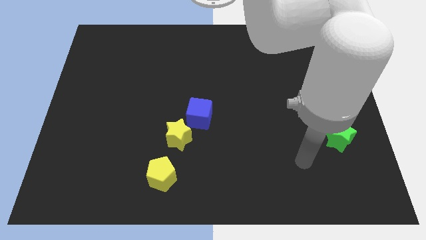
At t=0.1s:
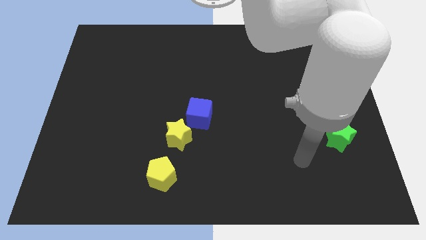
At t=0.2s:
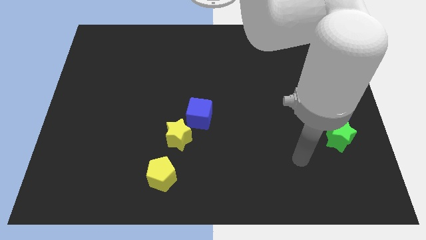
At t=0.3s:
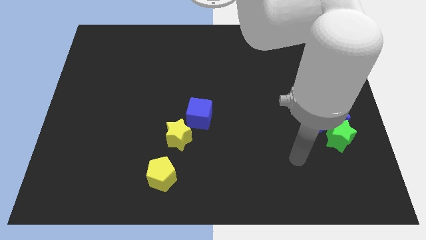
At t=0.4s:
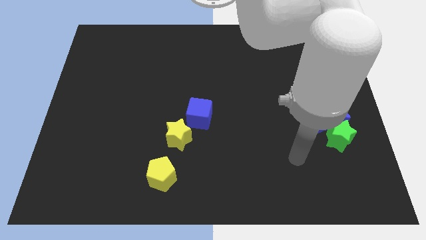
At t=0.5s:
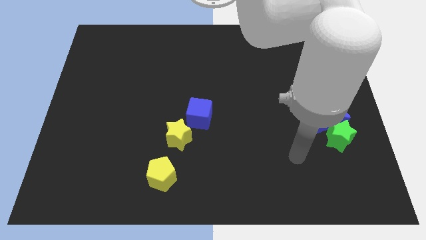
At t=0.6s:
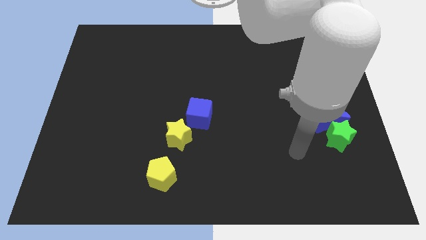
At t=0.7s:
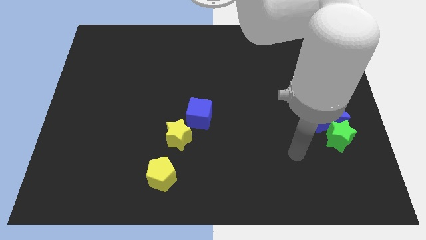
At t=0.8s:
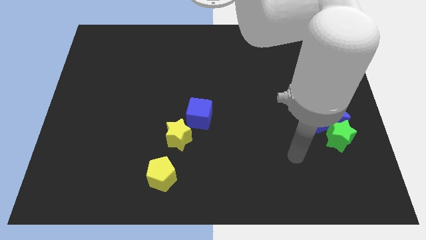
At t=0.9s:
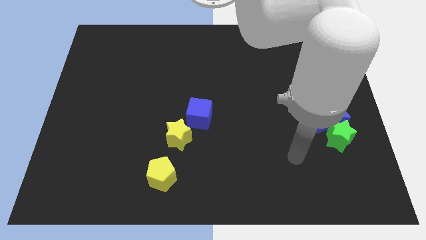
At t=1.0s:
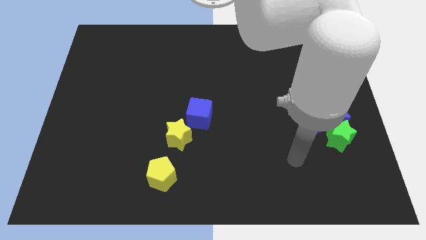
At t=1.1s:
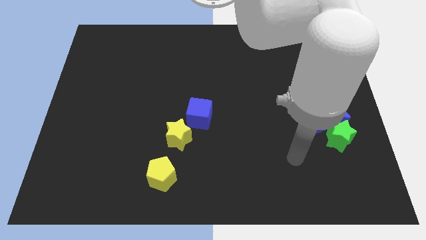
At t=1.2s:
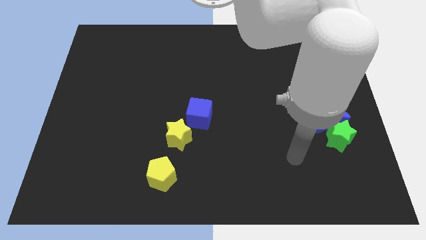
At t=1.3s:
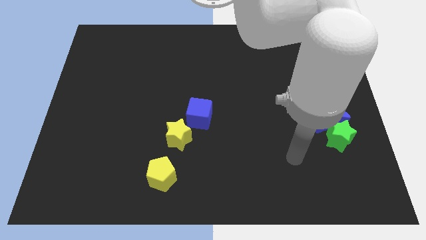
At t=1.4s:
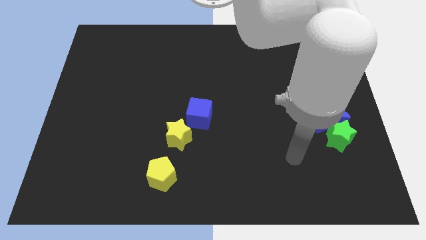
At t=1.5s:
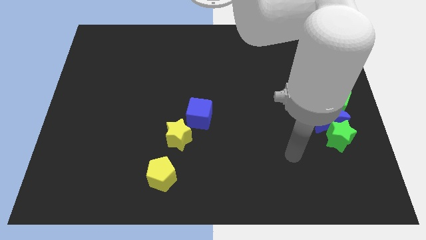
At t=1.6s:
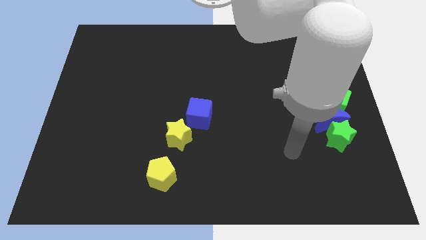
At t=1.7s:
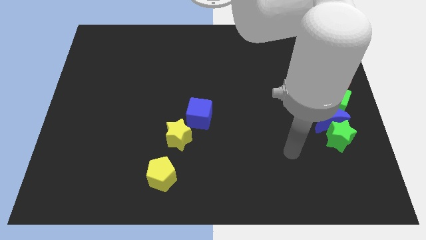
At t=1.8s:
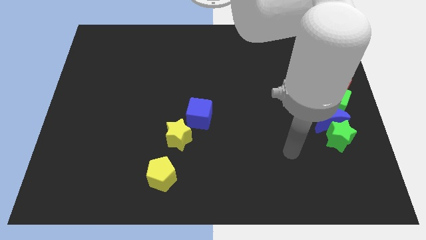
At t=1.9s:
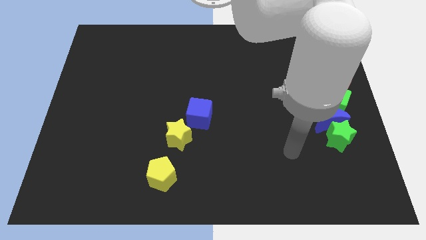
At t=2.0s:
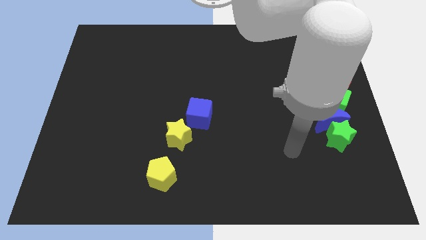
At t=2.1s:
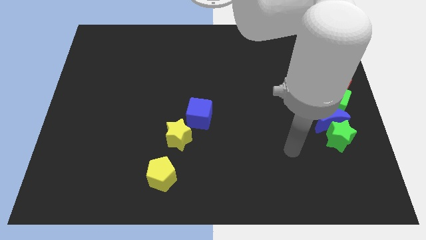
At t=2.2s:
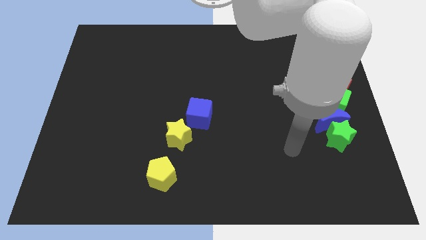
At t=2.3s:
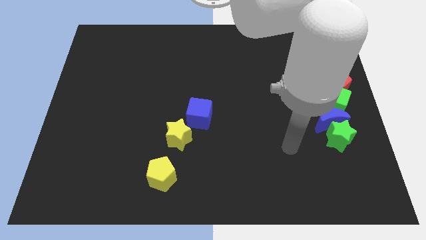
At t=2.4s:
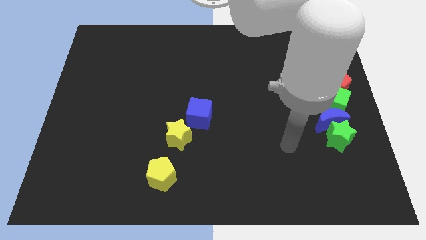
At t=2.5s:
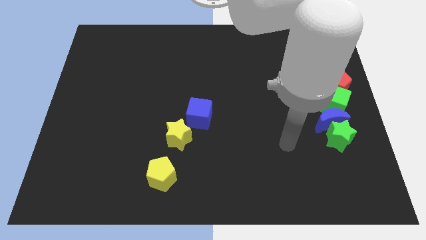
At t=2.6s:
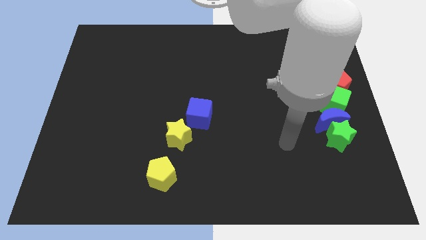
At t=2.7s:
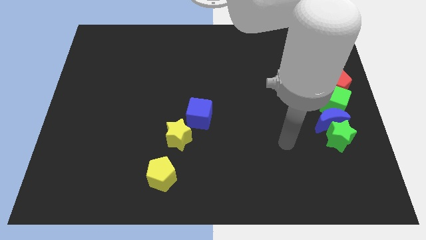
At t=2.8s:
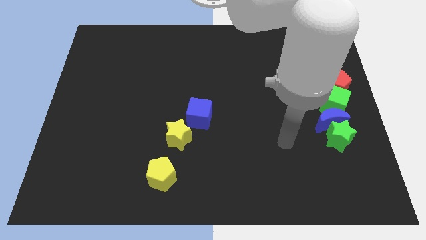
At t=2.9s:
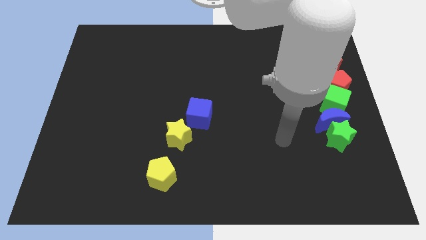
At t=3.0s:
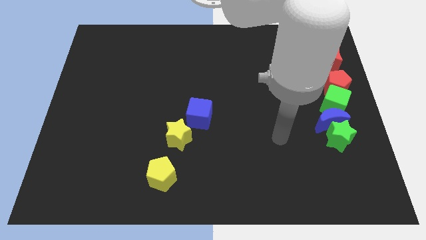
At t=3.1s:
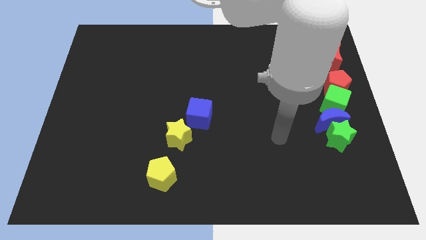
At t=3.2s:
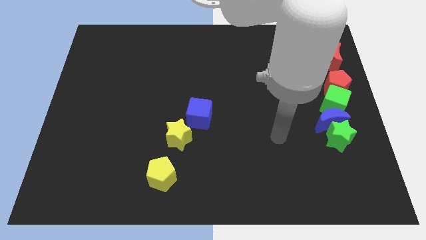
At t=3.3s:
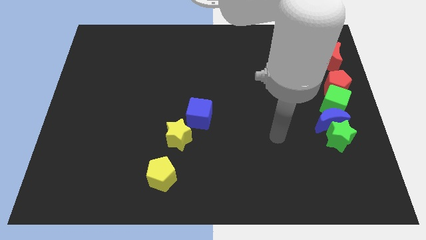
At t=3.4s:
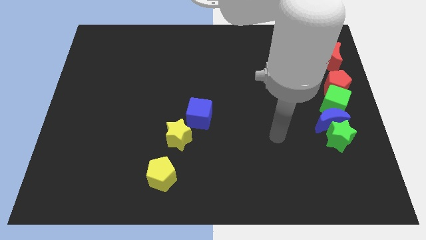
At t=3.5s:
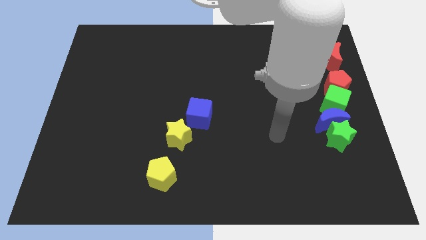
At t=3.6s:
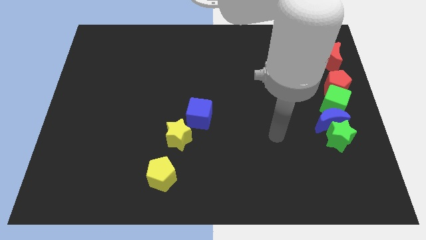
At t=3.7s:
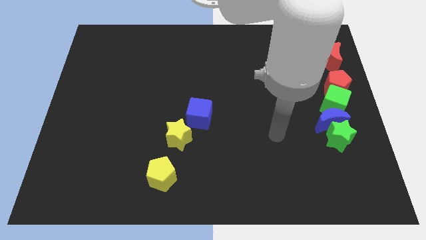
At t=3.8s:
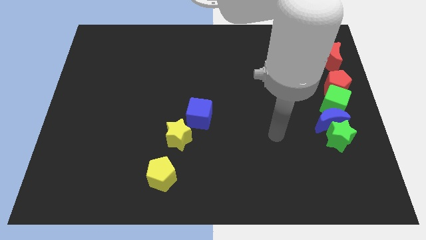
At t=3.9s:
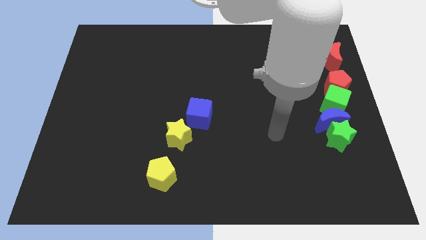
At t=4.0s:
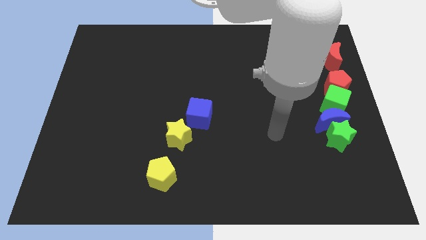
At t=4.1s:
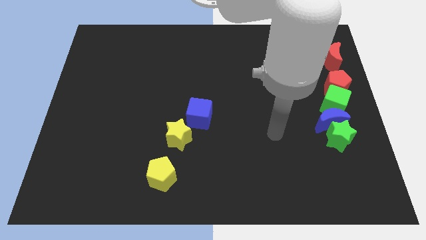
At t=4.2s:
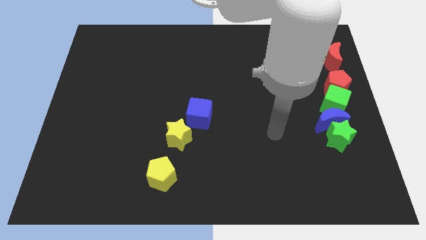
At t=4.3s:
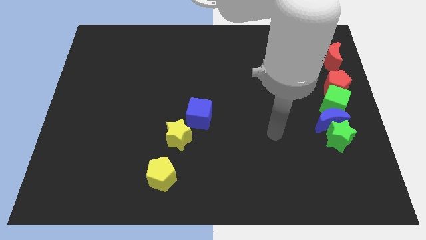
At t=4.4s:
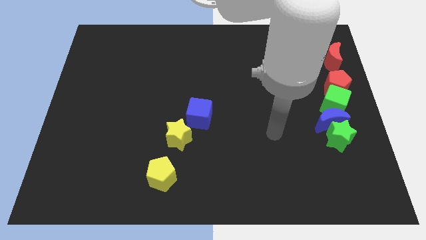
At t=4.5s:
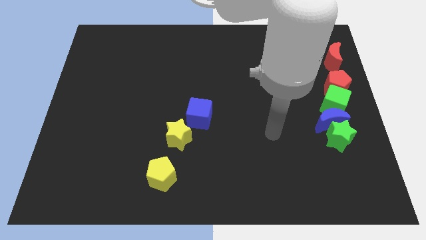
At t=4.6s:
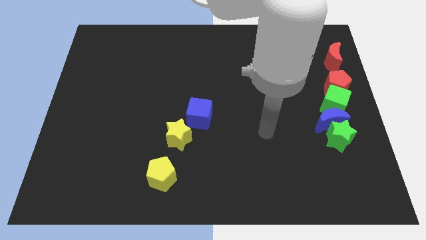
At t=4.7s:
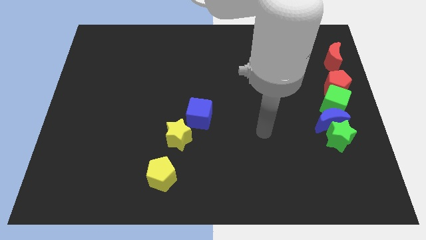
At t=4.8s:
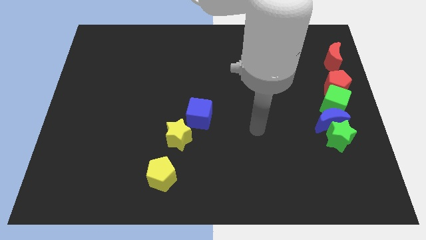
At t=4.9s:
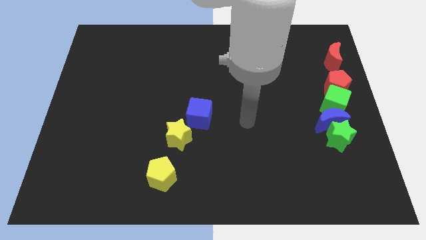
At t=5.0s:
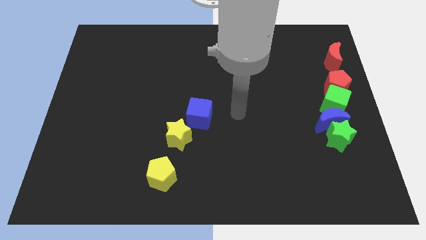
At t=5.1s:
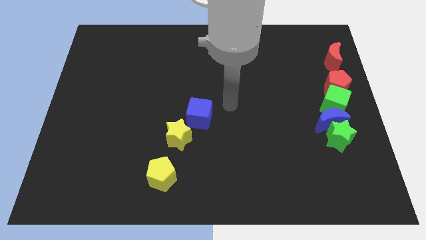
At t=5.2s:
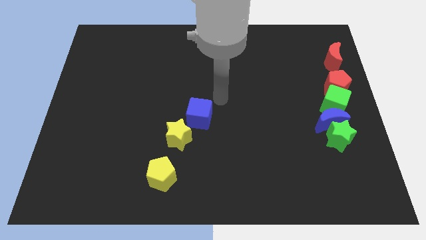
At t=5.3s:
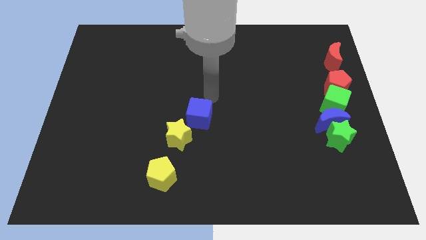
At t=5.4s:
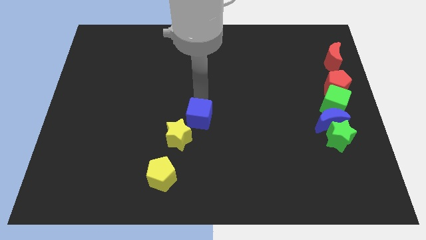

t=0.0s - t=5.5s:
point your arm at the top side of the blue cube

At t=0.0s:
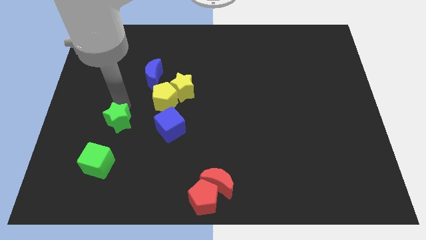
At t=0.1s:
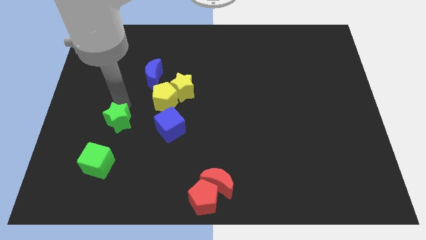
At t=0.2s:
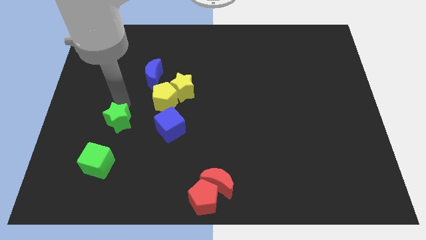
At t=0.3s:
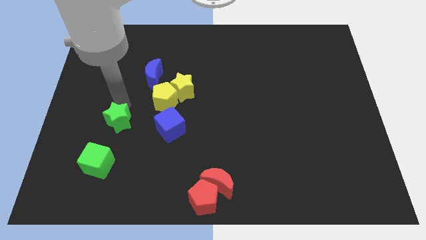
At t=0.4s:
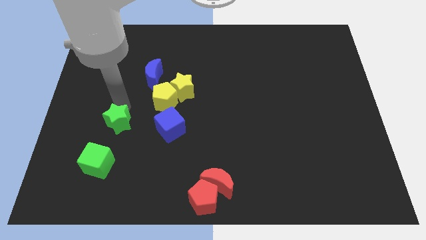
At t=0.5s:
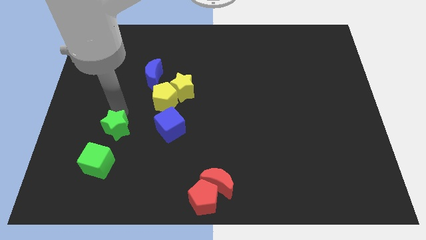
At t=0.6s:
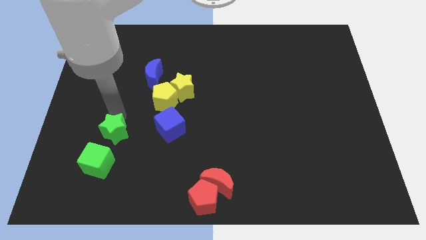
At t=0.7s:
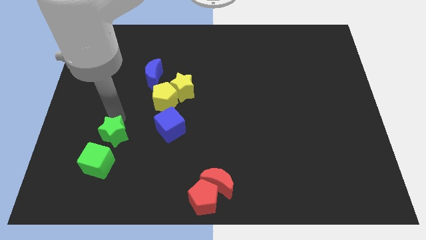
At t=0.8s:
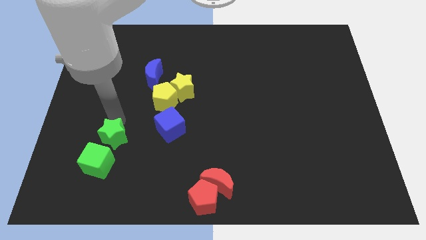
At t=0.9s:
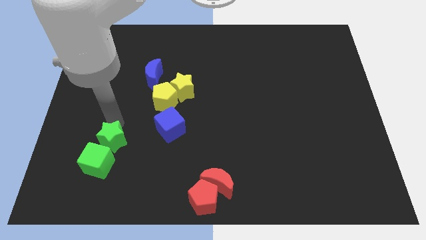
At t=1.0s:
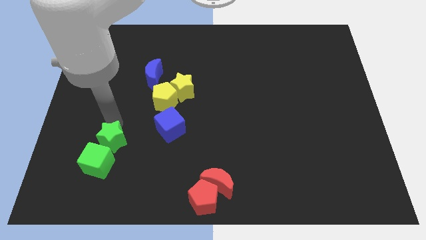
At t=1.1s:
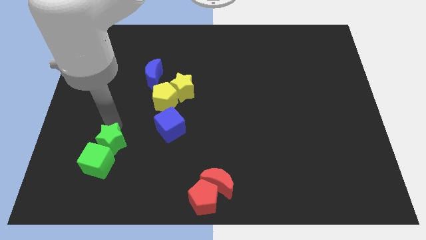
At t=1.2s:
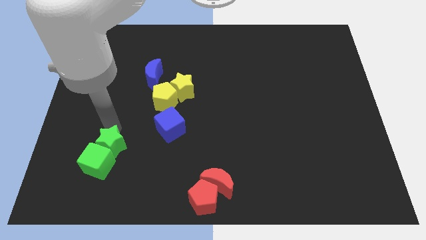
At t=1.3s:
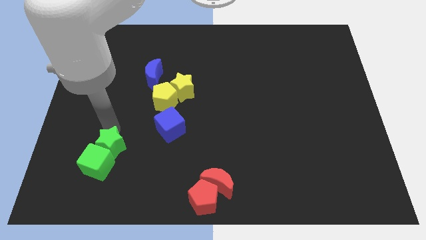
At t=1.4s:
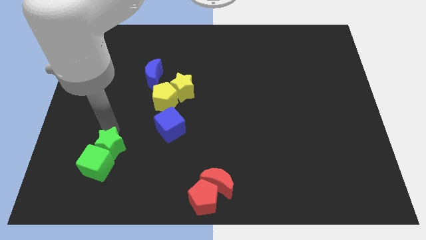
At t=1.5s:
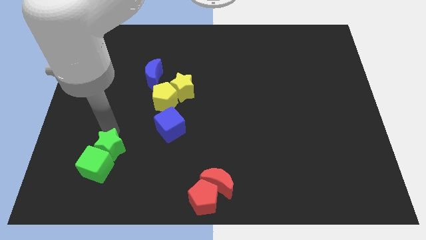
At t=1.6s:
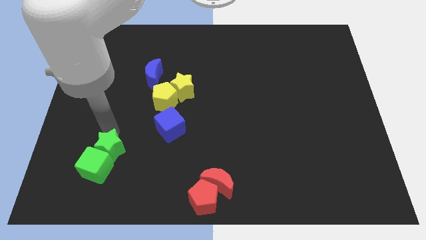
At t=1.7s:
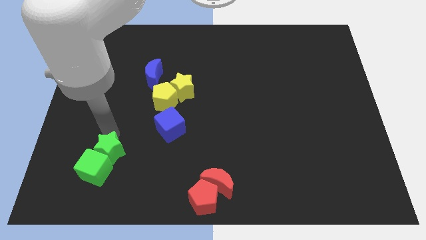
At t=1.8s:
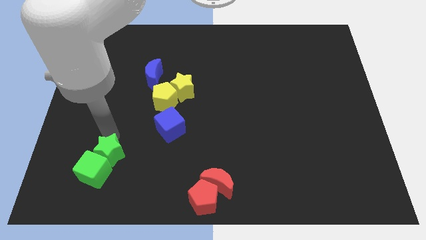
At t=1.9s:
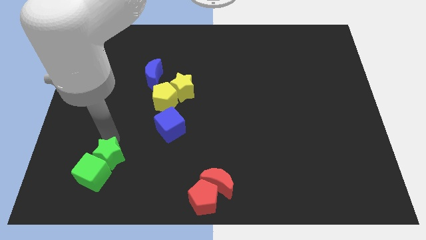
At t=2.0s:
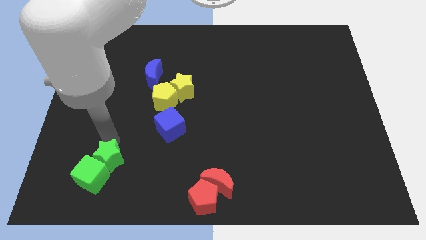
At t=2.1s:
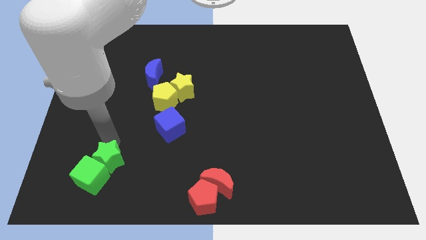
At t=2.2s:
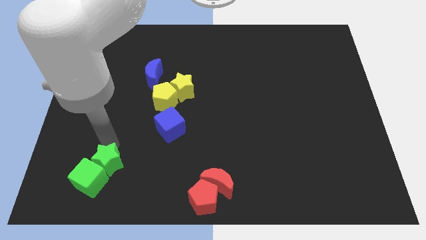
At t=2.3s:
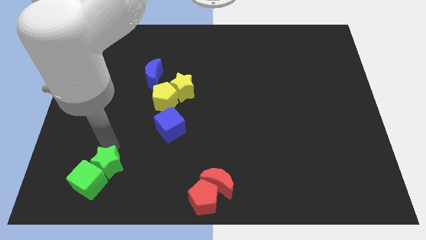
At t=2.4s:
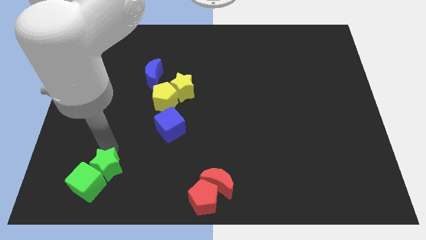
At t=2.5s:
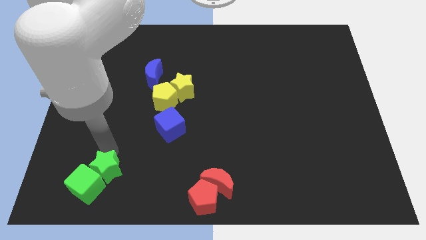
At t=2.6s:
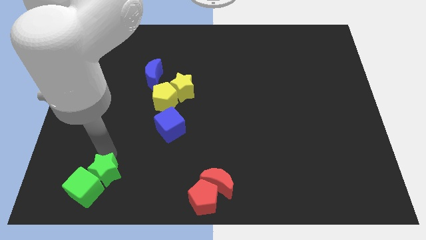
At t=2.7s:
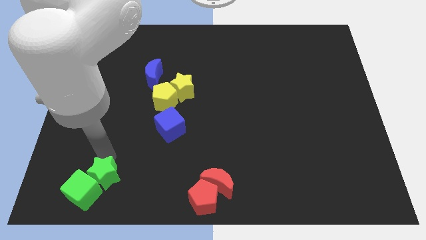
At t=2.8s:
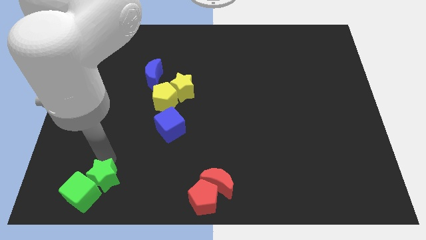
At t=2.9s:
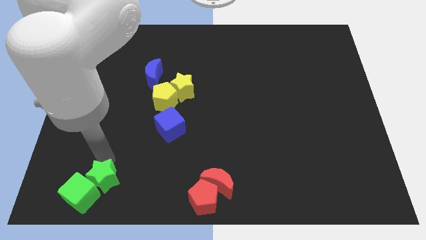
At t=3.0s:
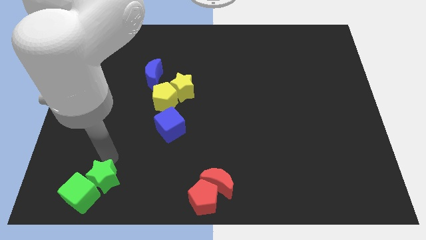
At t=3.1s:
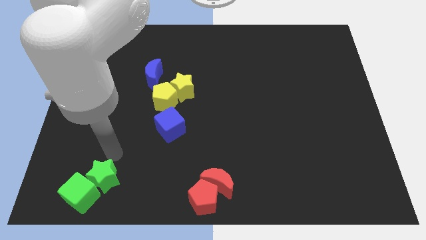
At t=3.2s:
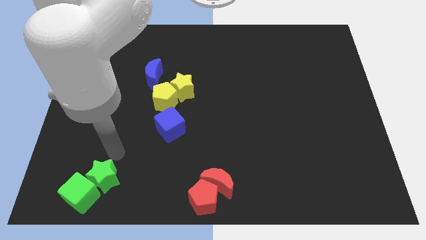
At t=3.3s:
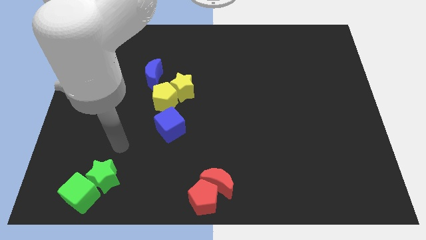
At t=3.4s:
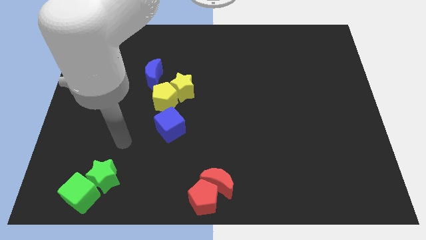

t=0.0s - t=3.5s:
slide both the green blocks together to the bottom side of the board
